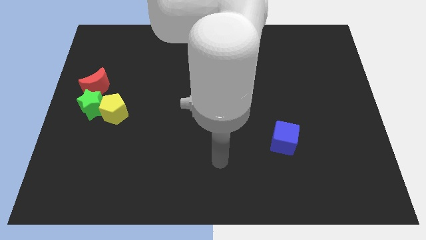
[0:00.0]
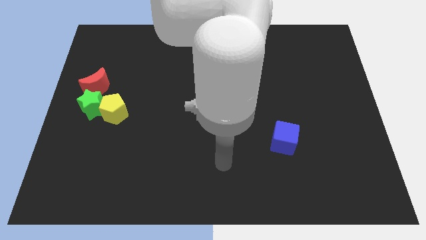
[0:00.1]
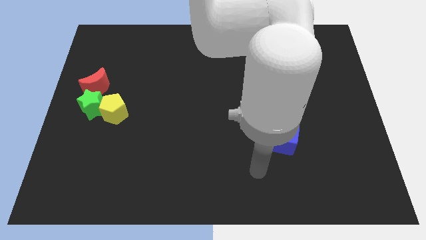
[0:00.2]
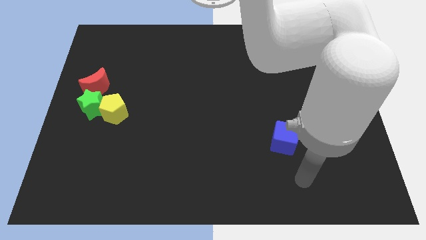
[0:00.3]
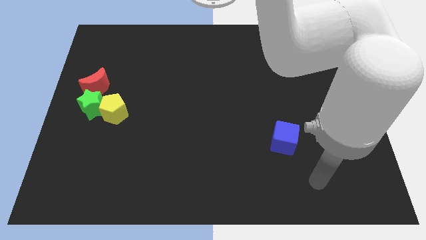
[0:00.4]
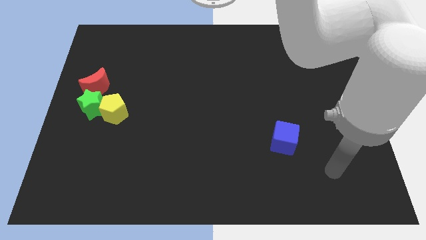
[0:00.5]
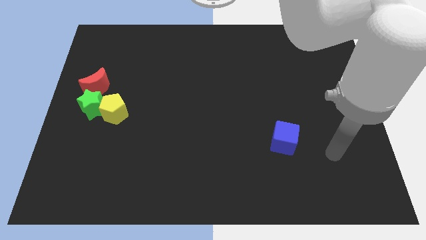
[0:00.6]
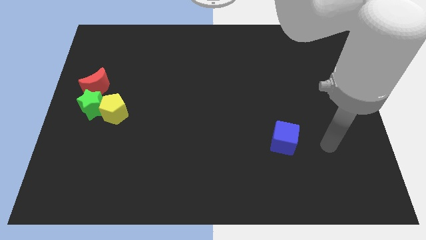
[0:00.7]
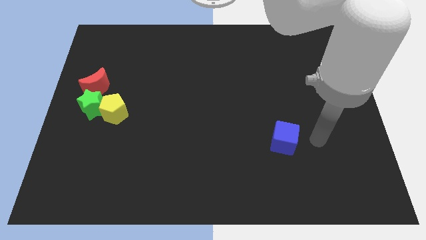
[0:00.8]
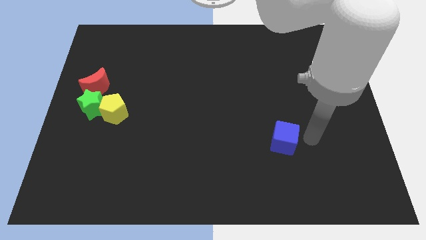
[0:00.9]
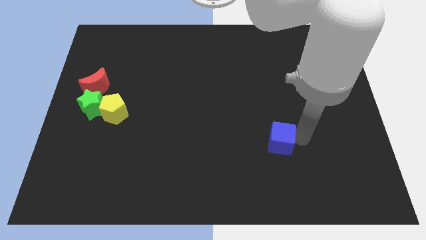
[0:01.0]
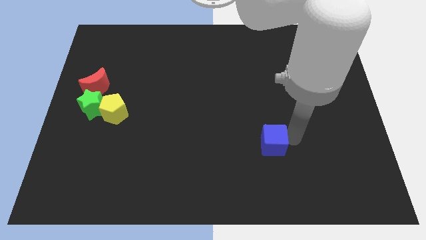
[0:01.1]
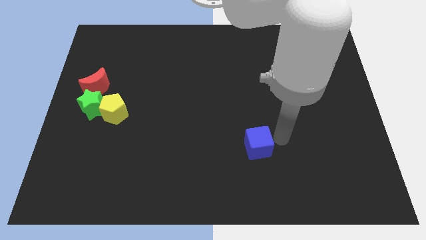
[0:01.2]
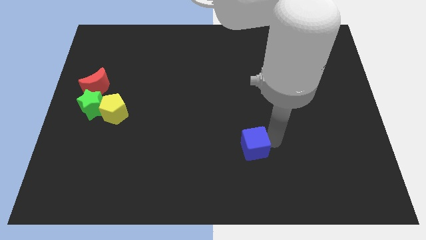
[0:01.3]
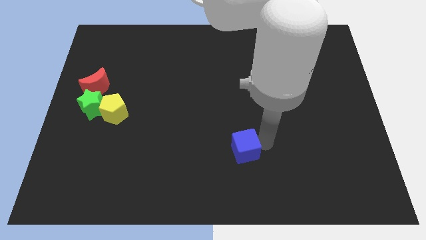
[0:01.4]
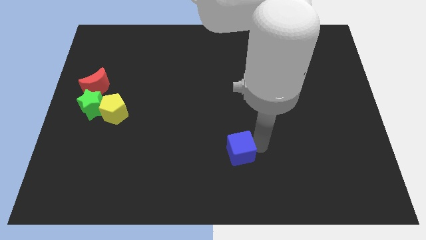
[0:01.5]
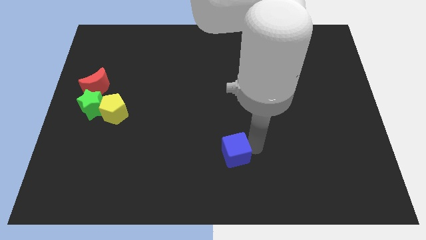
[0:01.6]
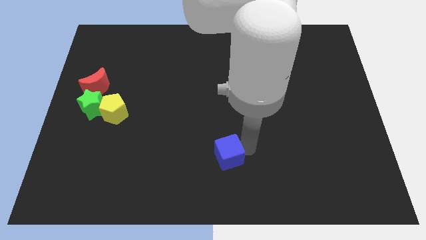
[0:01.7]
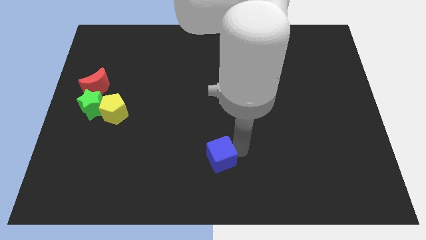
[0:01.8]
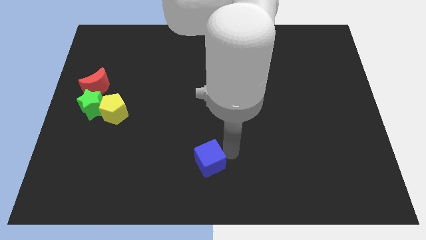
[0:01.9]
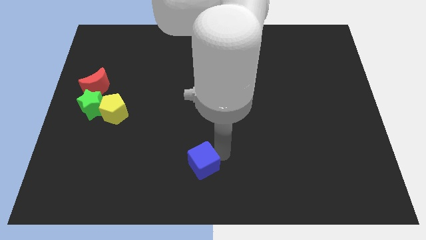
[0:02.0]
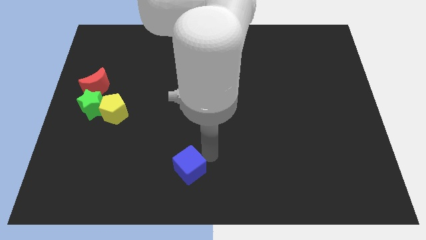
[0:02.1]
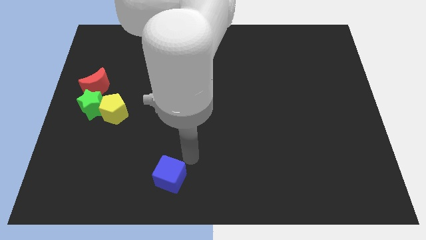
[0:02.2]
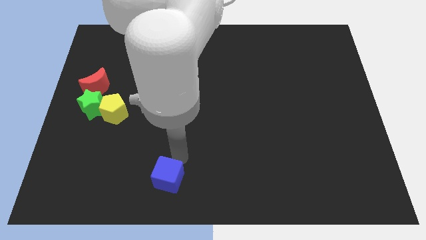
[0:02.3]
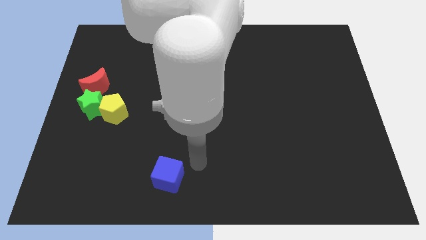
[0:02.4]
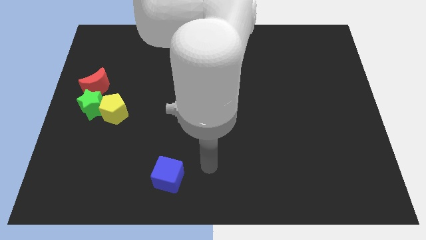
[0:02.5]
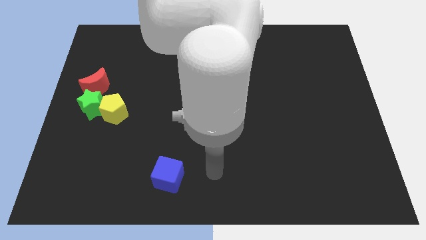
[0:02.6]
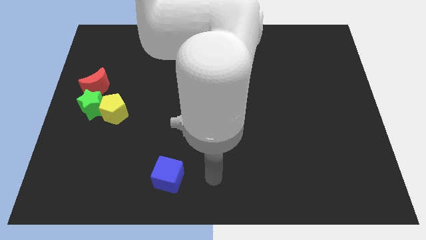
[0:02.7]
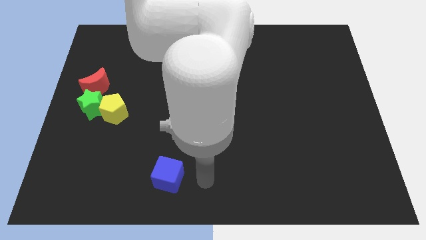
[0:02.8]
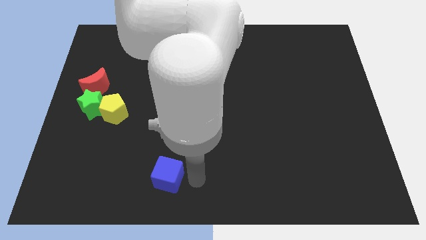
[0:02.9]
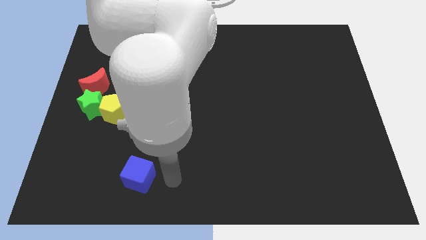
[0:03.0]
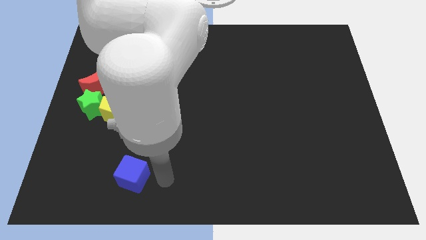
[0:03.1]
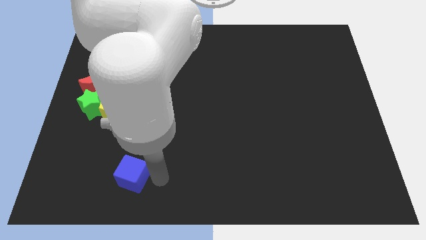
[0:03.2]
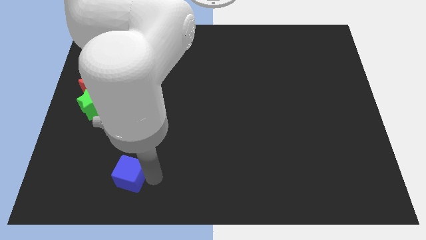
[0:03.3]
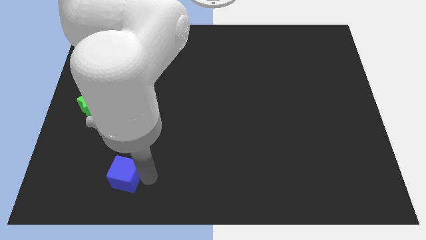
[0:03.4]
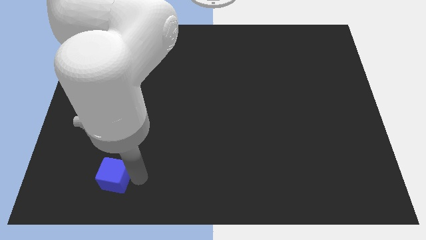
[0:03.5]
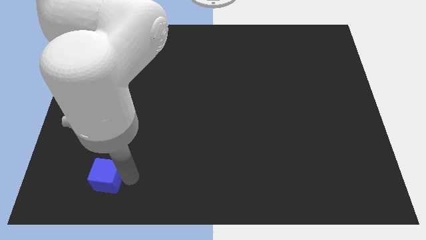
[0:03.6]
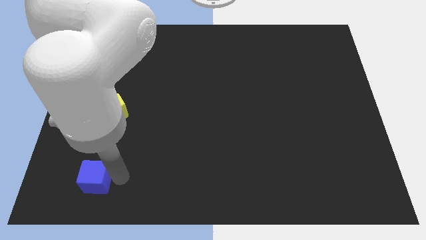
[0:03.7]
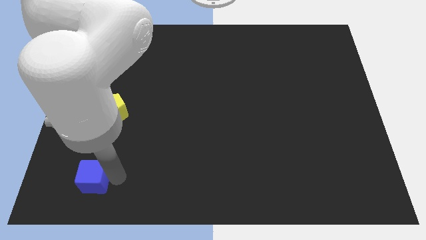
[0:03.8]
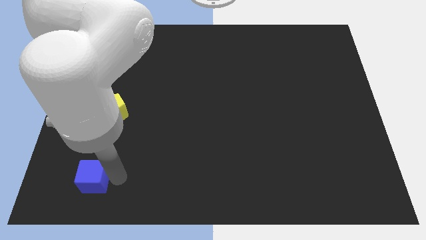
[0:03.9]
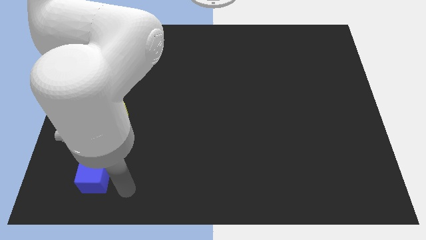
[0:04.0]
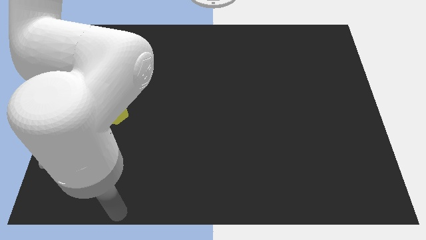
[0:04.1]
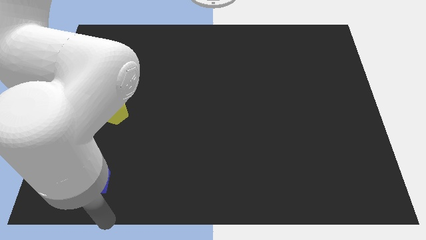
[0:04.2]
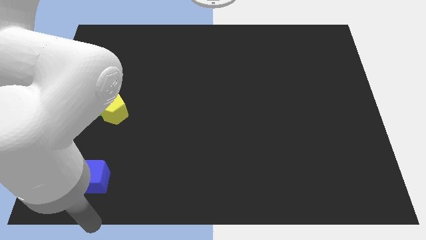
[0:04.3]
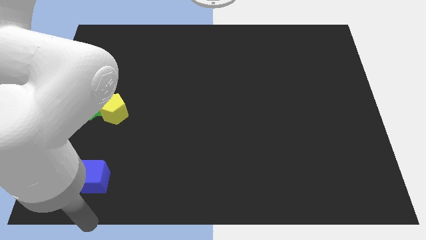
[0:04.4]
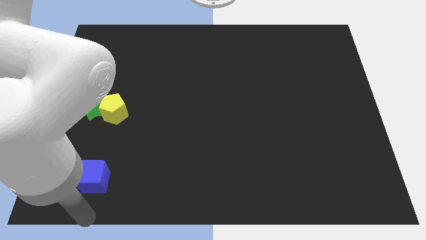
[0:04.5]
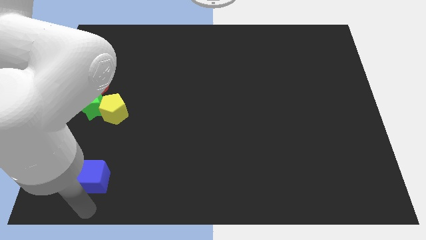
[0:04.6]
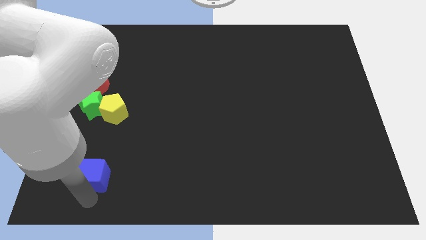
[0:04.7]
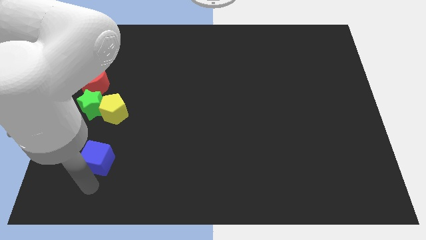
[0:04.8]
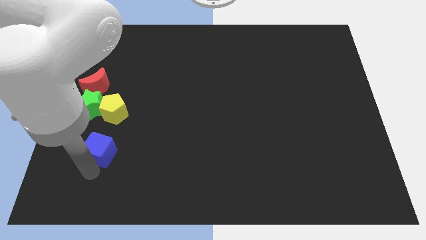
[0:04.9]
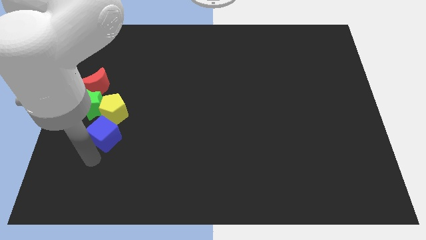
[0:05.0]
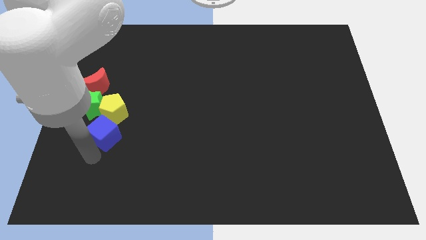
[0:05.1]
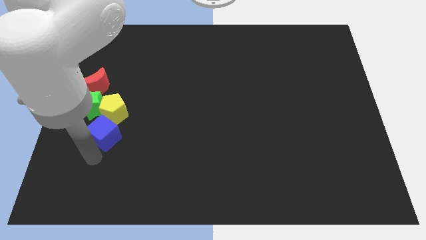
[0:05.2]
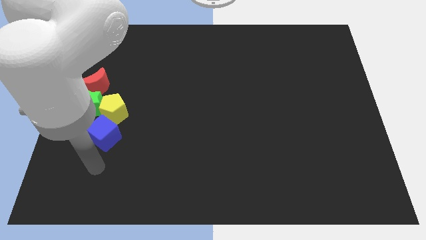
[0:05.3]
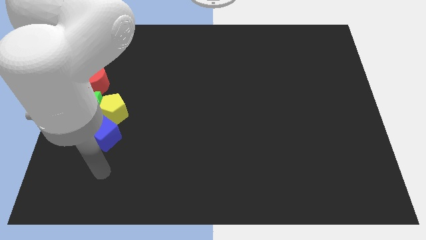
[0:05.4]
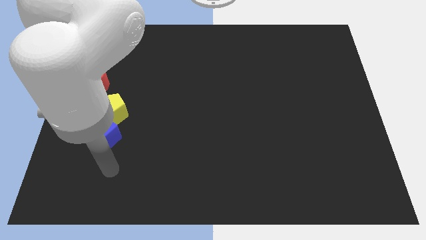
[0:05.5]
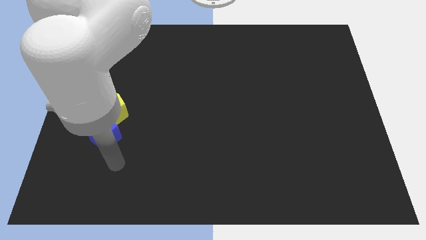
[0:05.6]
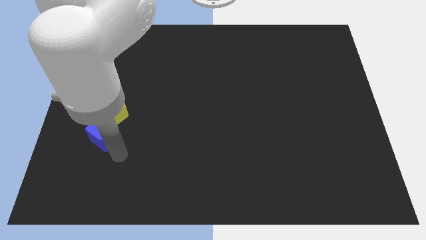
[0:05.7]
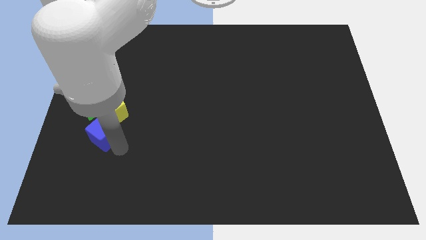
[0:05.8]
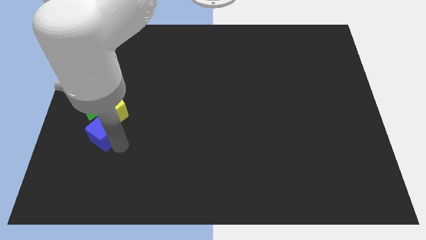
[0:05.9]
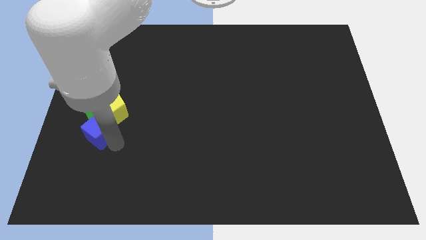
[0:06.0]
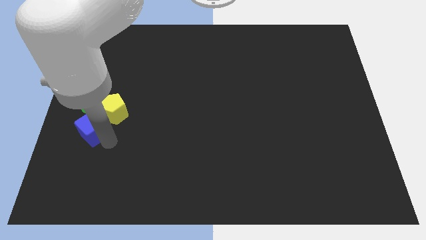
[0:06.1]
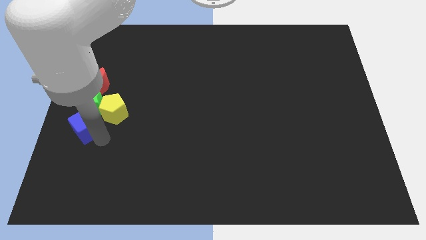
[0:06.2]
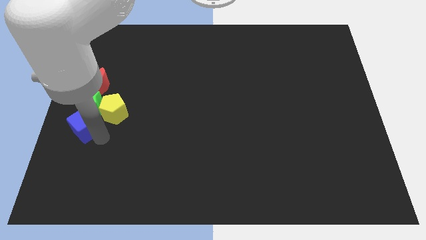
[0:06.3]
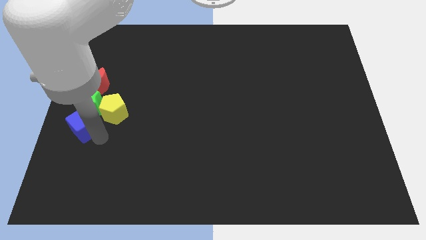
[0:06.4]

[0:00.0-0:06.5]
put the cube towards the green star

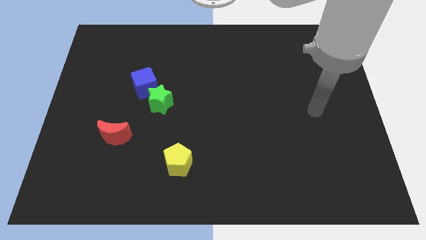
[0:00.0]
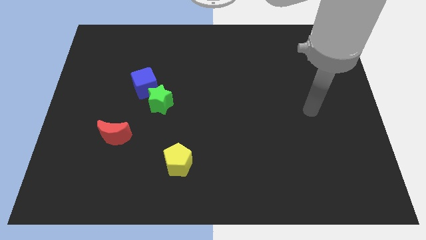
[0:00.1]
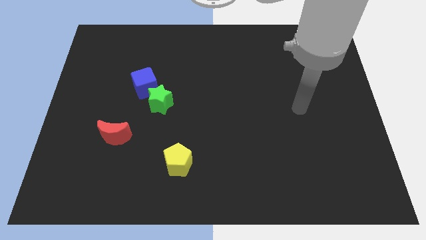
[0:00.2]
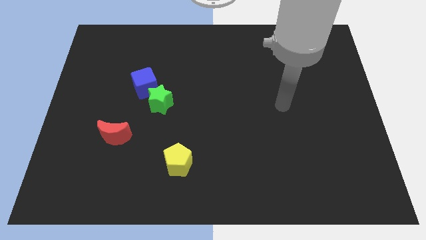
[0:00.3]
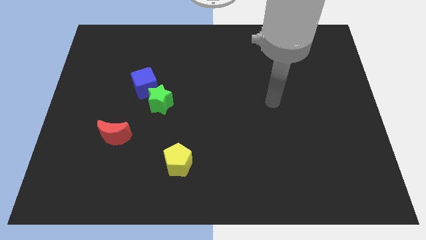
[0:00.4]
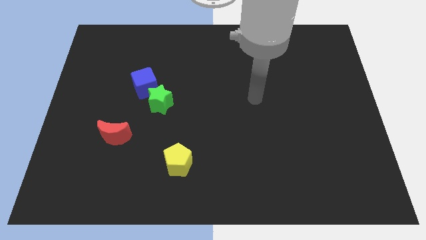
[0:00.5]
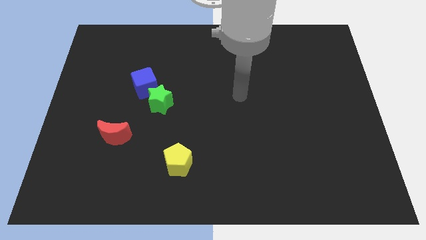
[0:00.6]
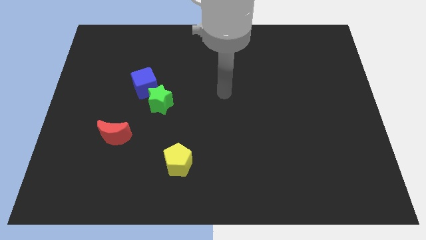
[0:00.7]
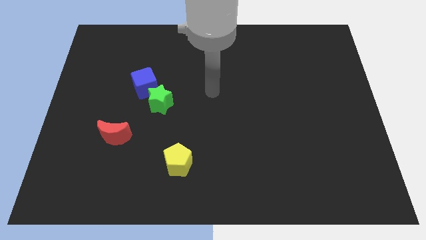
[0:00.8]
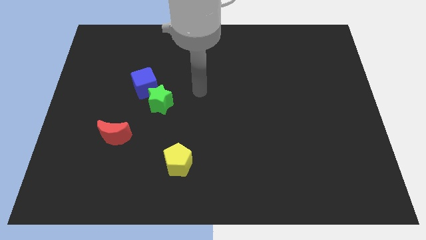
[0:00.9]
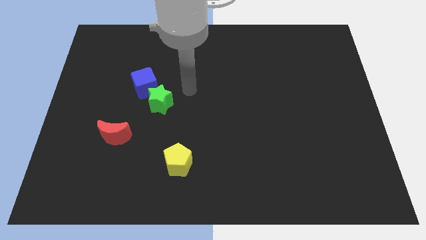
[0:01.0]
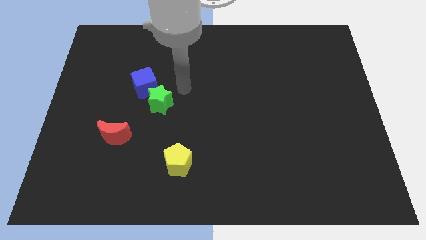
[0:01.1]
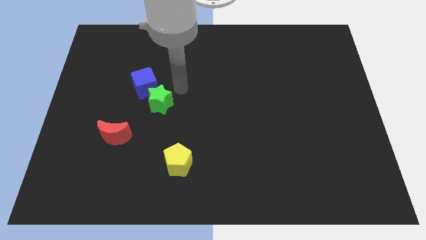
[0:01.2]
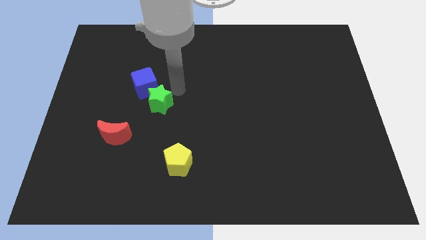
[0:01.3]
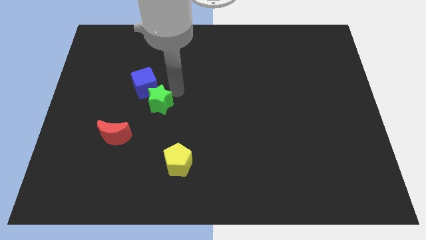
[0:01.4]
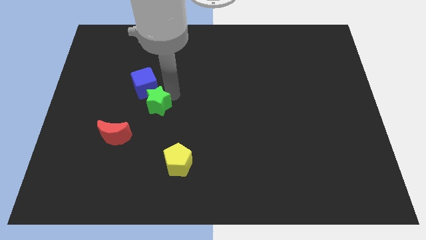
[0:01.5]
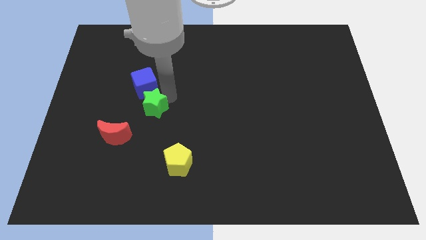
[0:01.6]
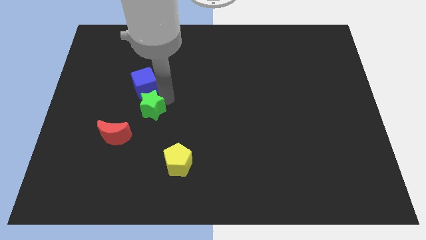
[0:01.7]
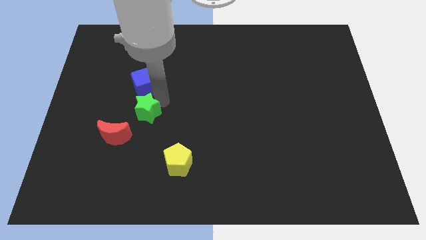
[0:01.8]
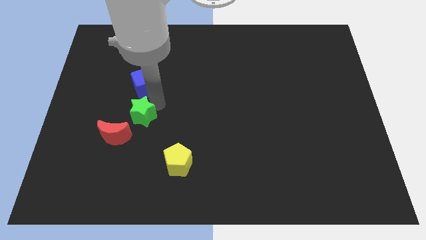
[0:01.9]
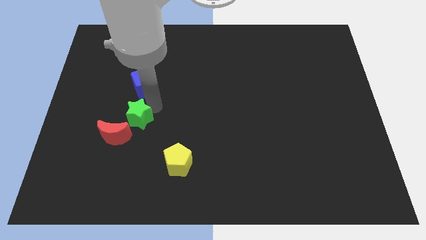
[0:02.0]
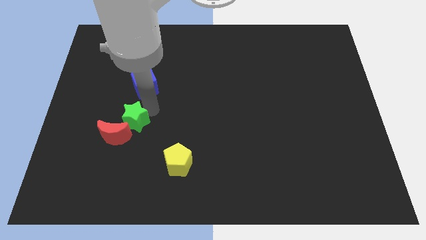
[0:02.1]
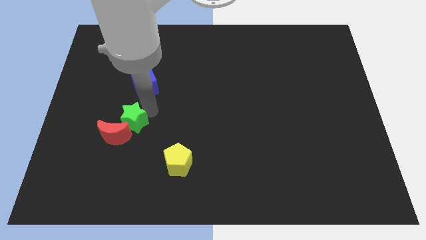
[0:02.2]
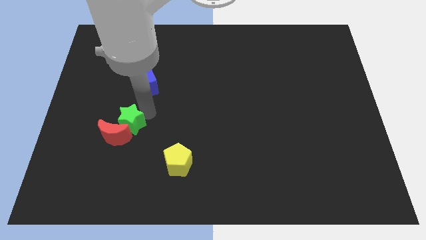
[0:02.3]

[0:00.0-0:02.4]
put the green star next to the red block
